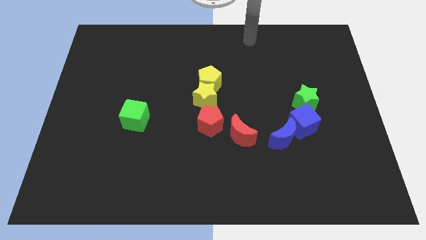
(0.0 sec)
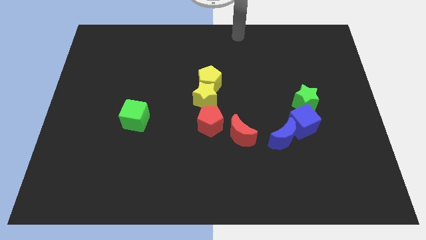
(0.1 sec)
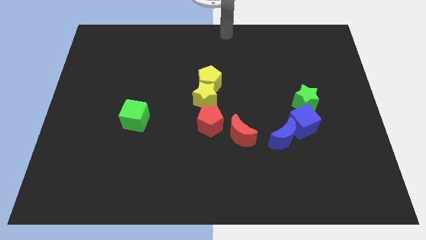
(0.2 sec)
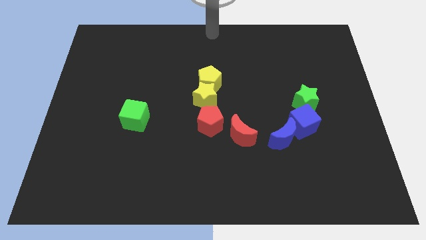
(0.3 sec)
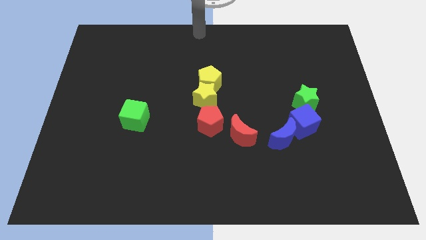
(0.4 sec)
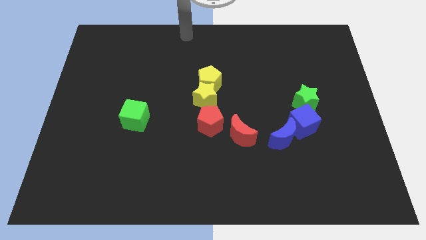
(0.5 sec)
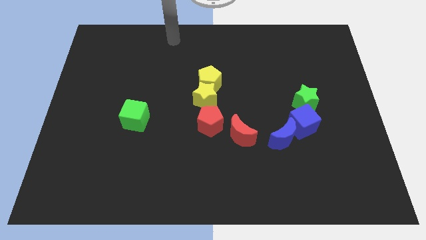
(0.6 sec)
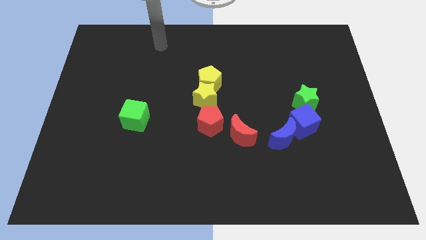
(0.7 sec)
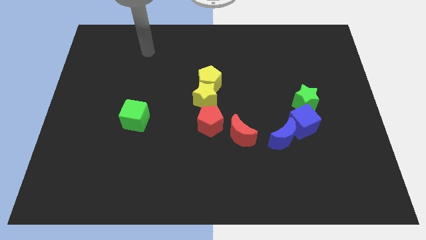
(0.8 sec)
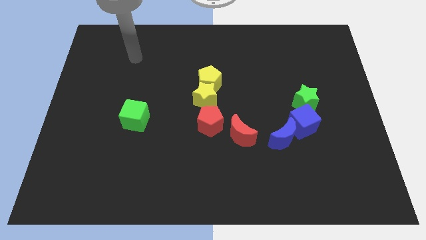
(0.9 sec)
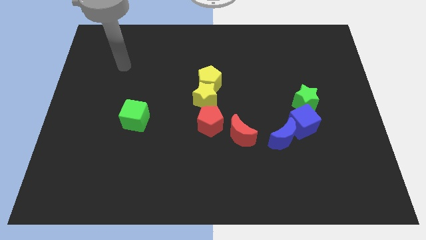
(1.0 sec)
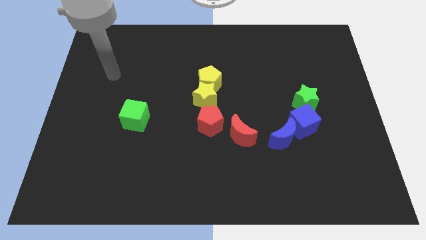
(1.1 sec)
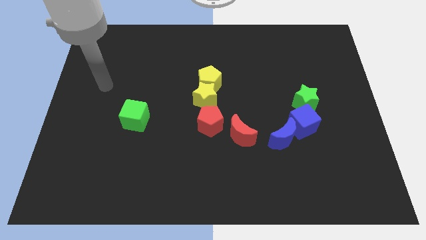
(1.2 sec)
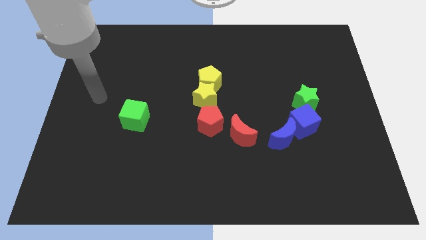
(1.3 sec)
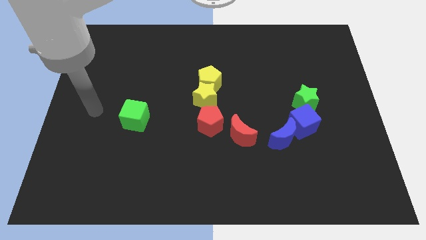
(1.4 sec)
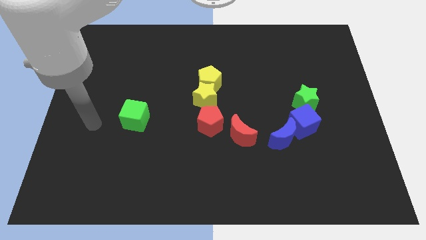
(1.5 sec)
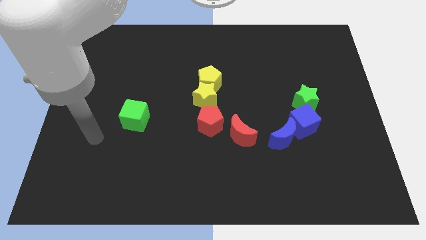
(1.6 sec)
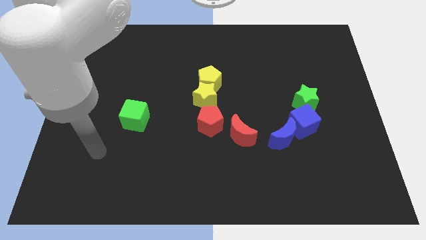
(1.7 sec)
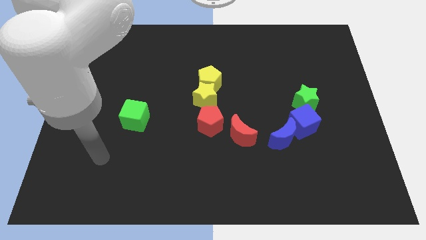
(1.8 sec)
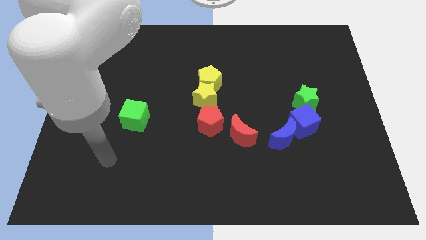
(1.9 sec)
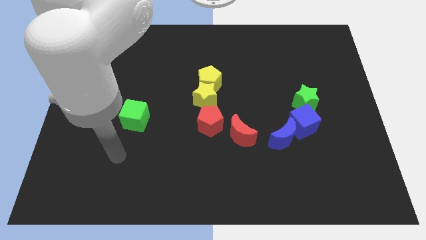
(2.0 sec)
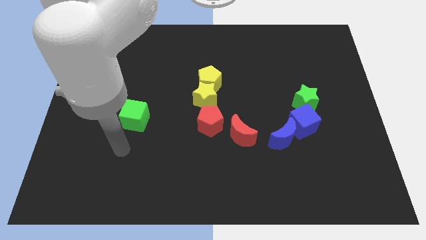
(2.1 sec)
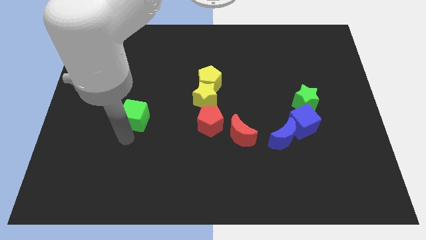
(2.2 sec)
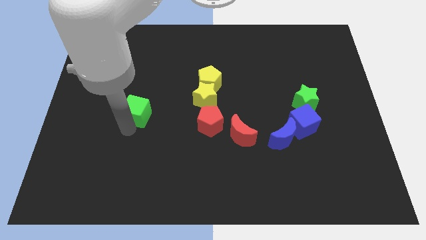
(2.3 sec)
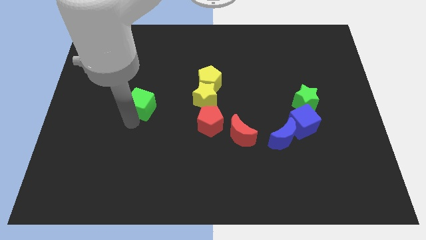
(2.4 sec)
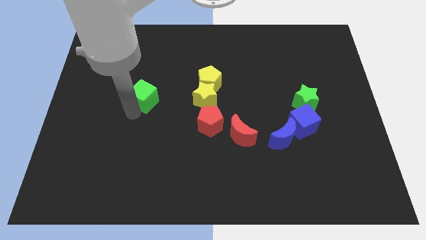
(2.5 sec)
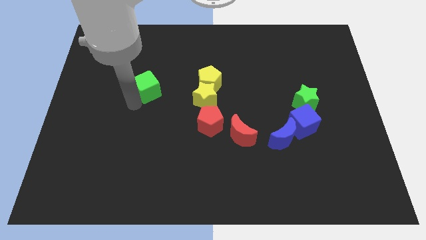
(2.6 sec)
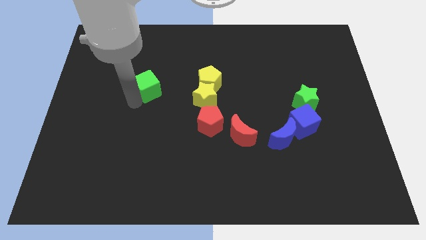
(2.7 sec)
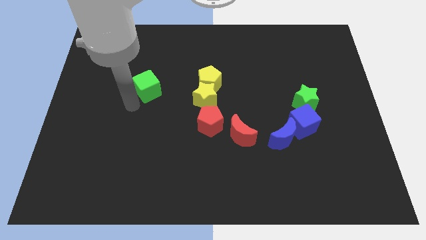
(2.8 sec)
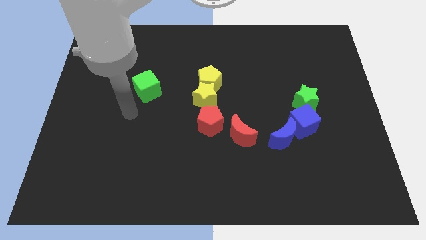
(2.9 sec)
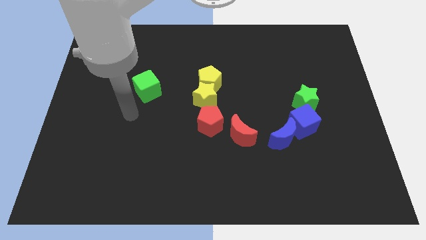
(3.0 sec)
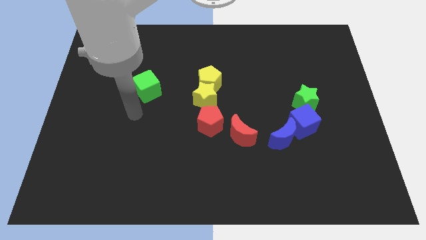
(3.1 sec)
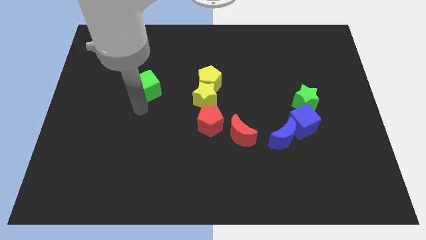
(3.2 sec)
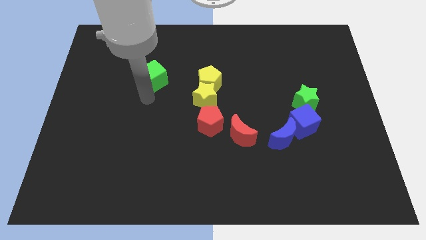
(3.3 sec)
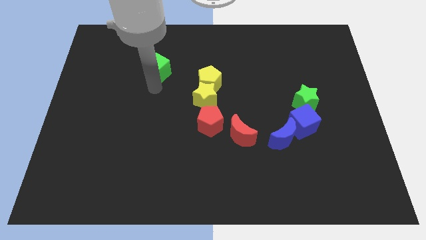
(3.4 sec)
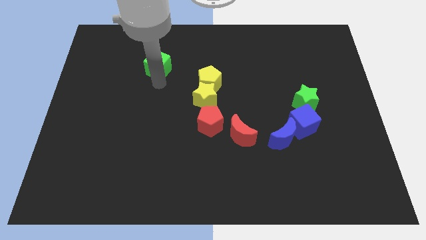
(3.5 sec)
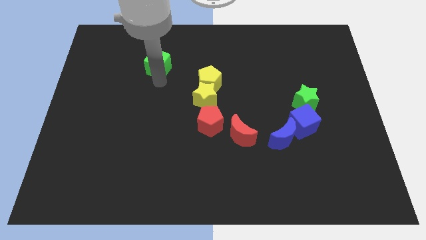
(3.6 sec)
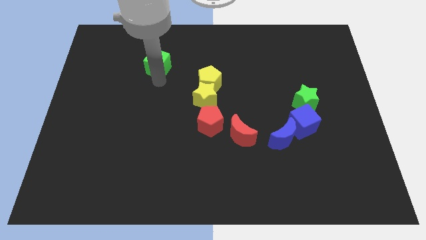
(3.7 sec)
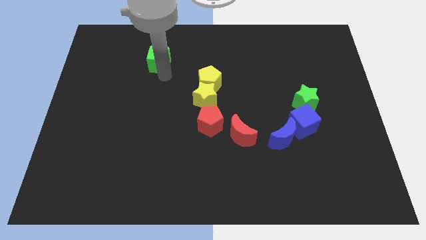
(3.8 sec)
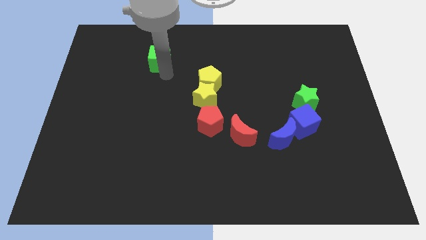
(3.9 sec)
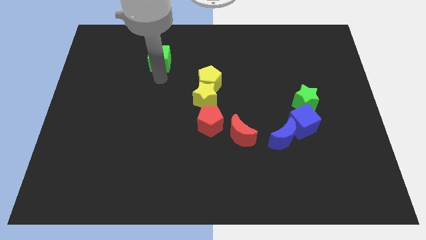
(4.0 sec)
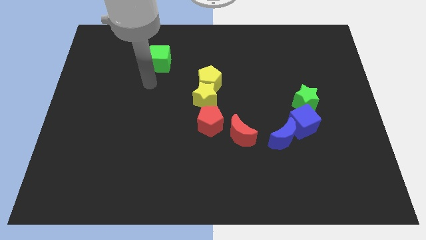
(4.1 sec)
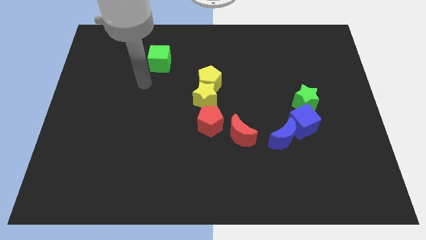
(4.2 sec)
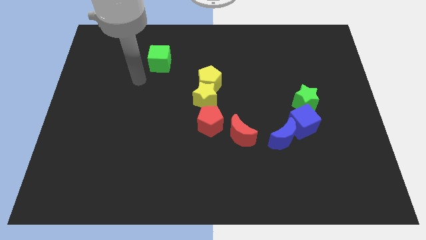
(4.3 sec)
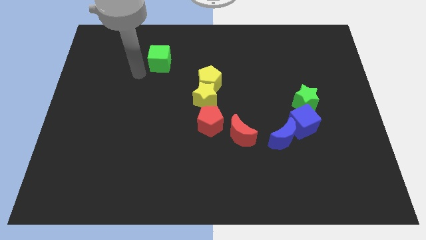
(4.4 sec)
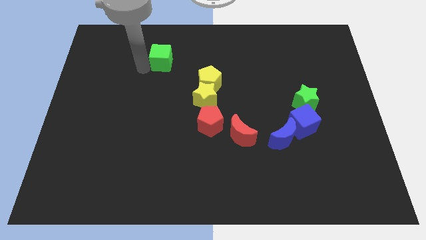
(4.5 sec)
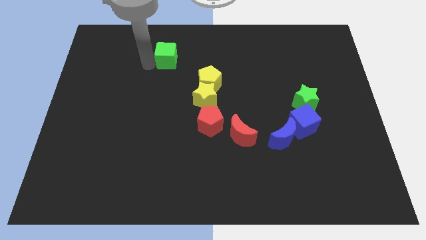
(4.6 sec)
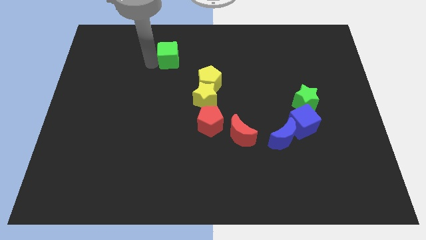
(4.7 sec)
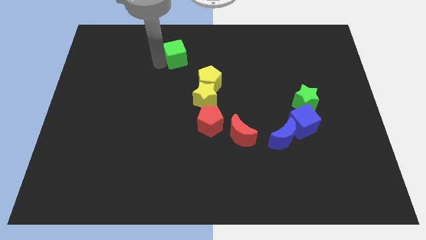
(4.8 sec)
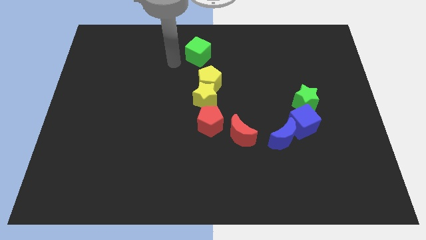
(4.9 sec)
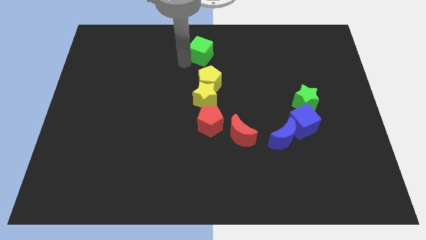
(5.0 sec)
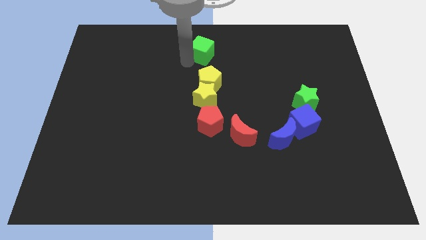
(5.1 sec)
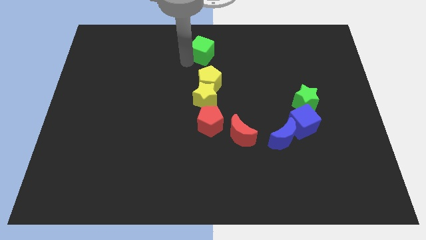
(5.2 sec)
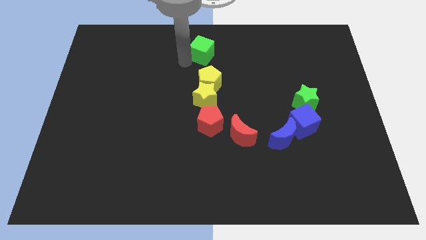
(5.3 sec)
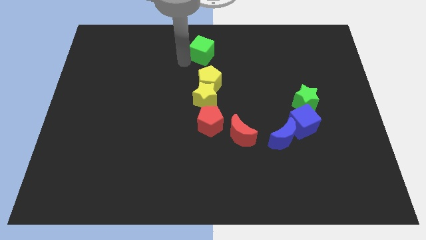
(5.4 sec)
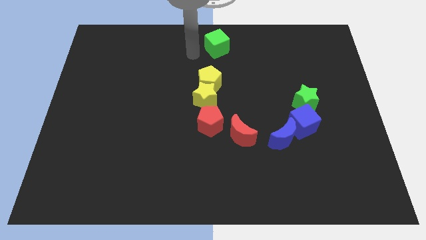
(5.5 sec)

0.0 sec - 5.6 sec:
push the green cube to the top center of the board

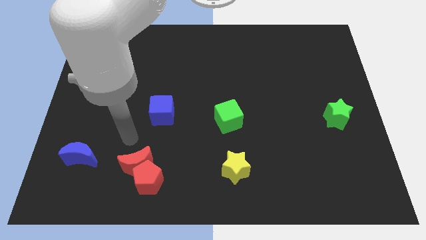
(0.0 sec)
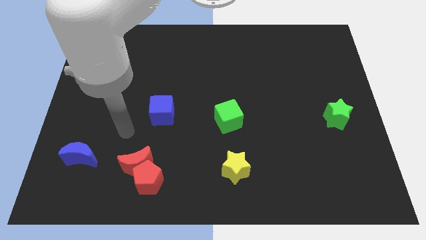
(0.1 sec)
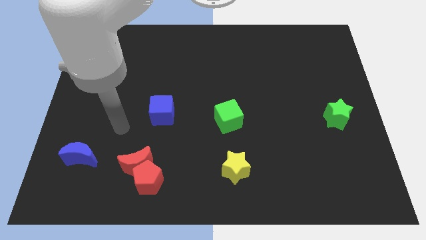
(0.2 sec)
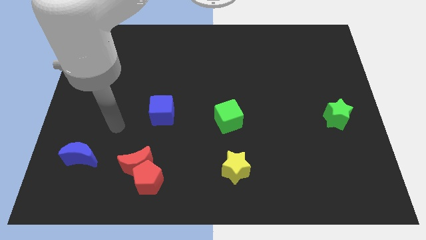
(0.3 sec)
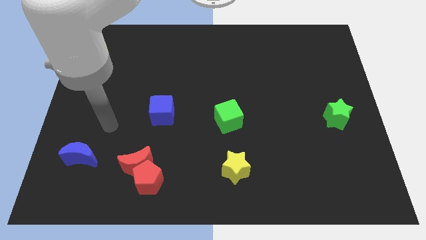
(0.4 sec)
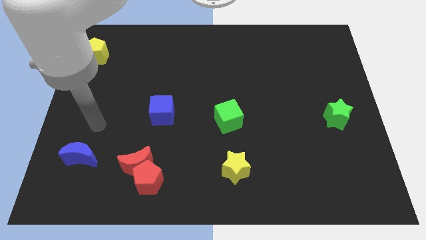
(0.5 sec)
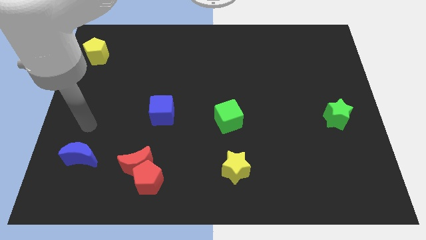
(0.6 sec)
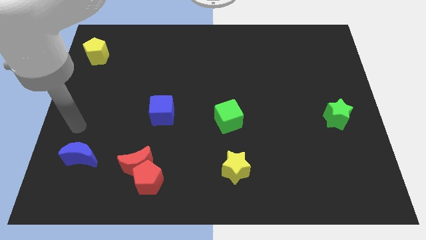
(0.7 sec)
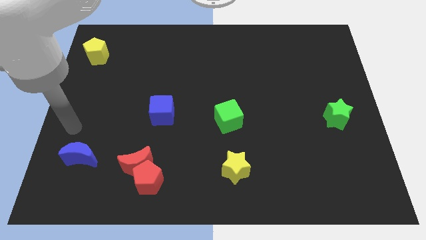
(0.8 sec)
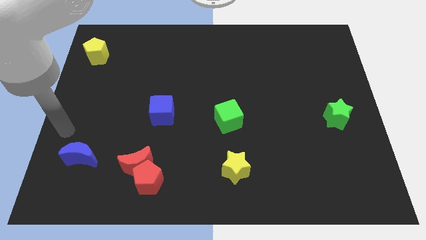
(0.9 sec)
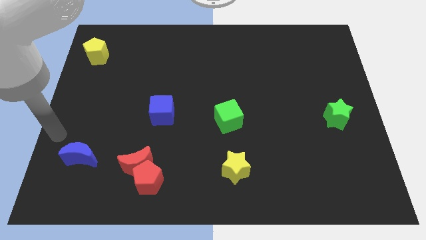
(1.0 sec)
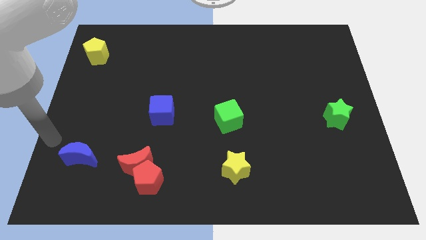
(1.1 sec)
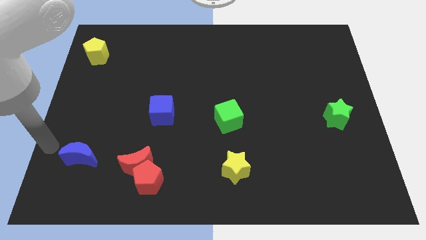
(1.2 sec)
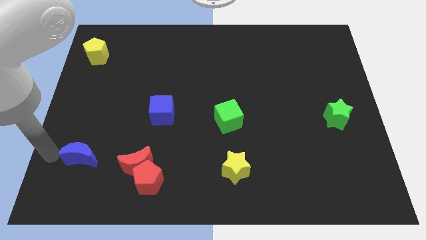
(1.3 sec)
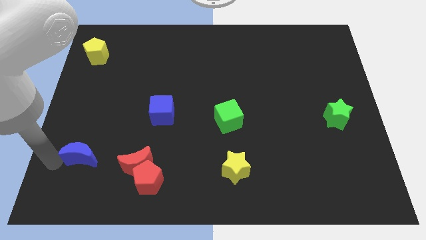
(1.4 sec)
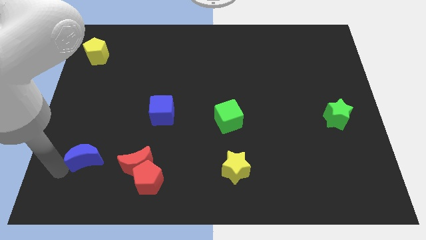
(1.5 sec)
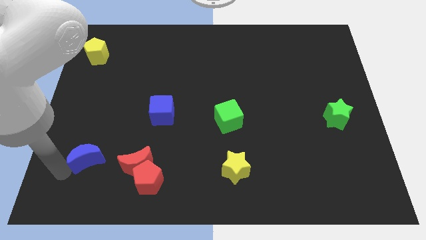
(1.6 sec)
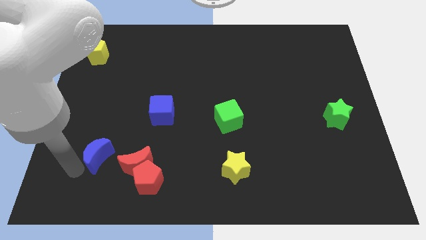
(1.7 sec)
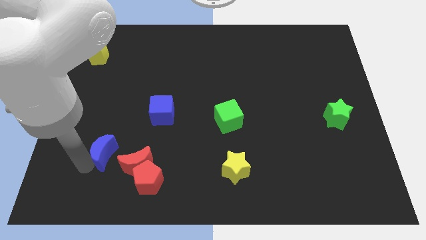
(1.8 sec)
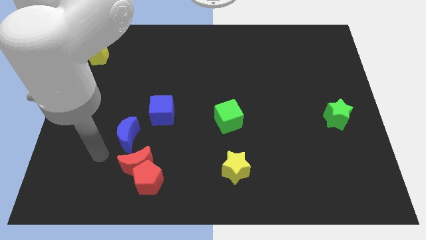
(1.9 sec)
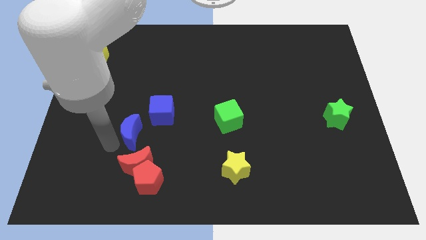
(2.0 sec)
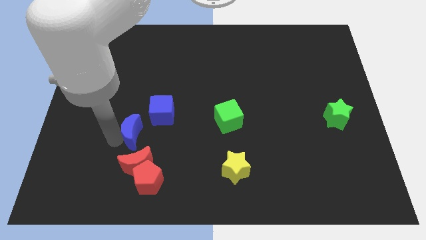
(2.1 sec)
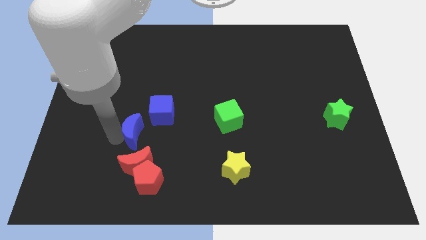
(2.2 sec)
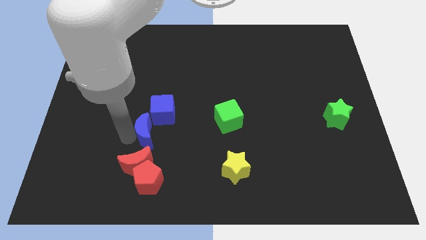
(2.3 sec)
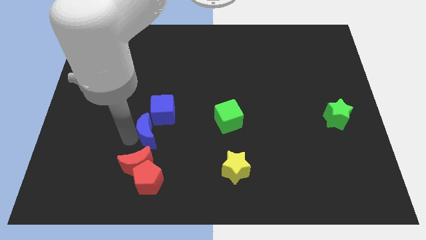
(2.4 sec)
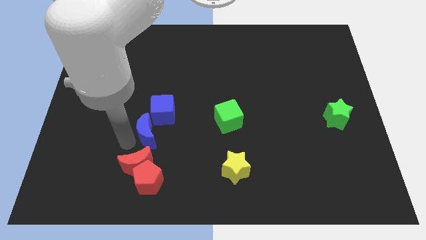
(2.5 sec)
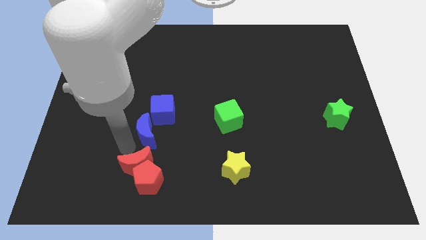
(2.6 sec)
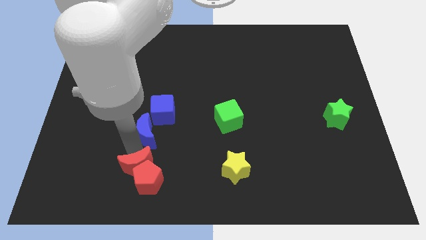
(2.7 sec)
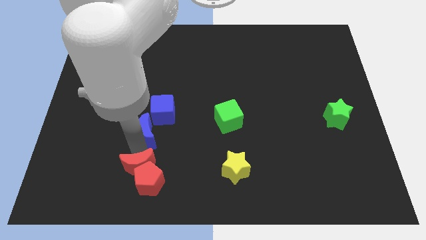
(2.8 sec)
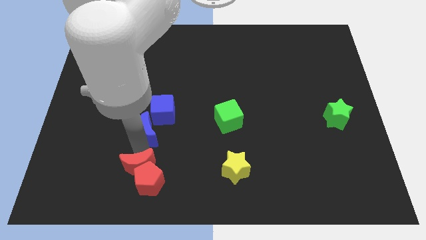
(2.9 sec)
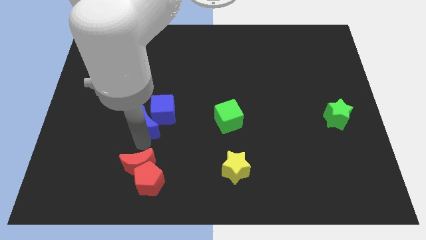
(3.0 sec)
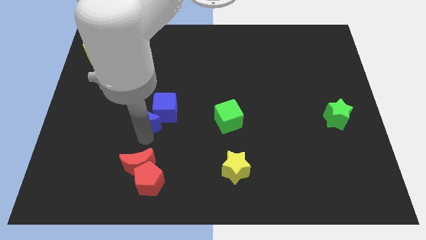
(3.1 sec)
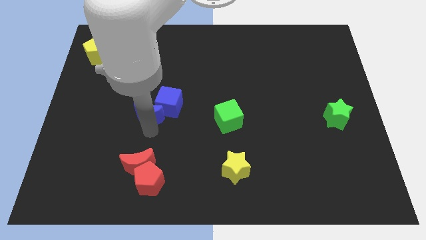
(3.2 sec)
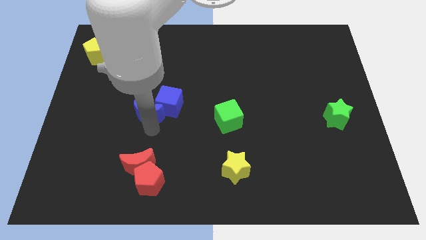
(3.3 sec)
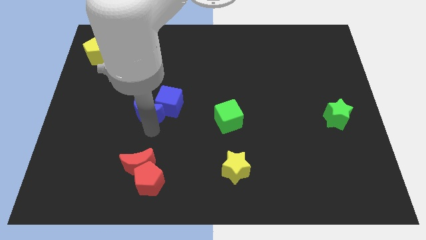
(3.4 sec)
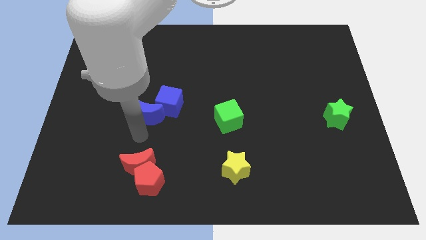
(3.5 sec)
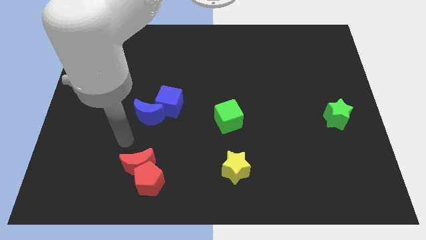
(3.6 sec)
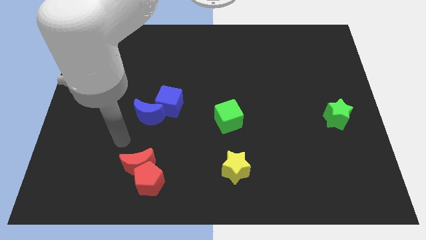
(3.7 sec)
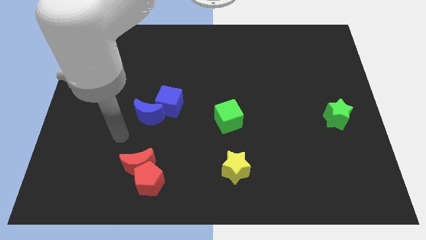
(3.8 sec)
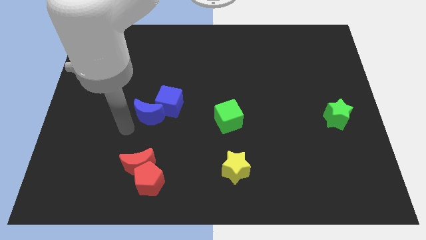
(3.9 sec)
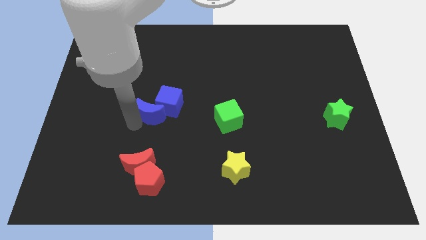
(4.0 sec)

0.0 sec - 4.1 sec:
move the blue moon above the red moon
